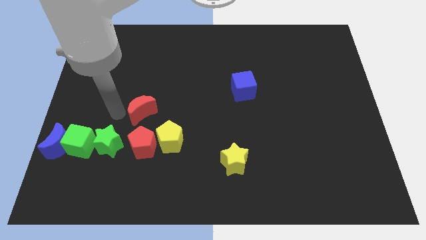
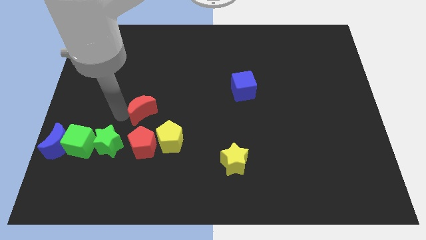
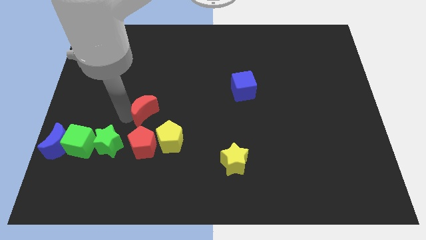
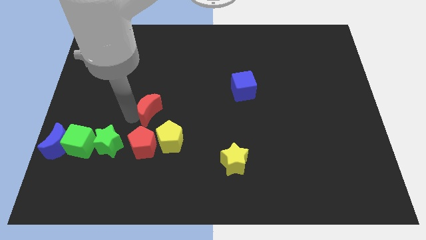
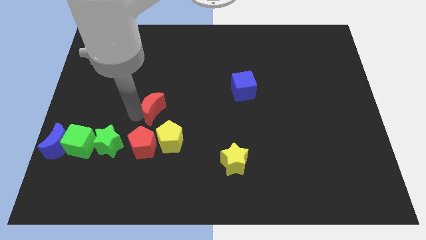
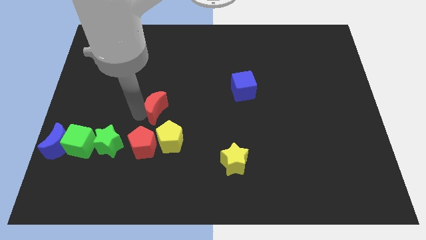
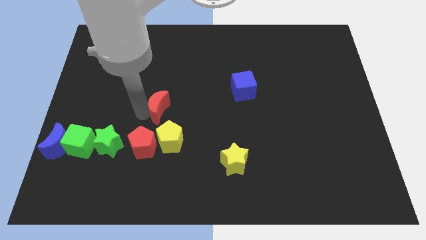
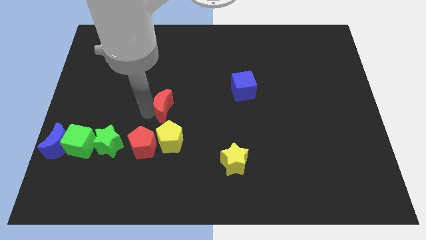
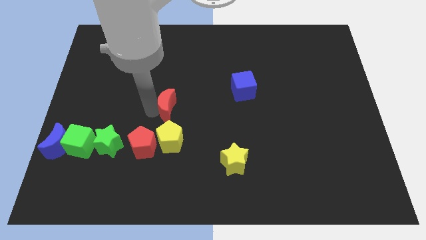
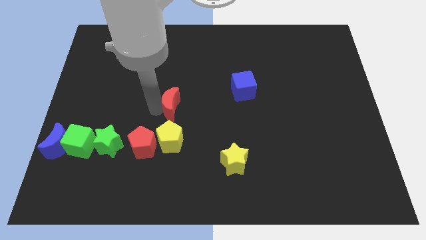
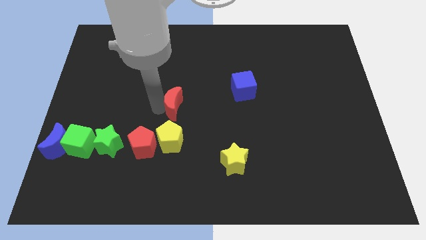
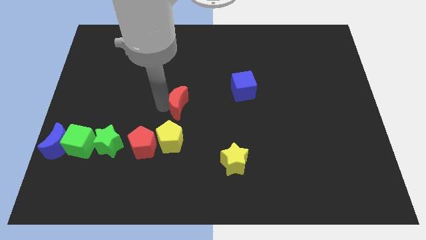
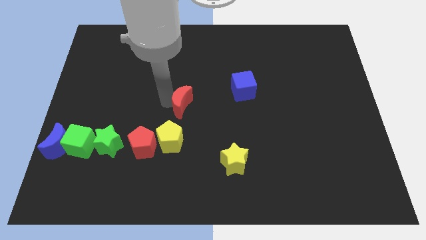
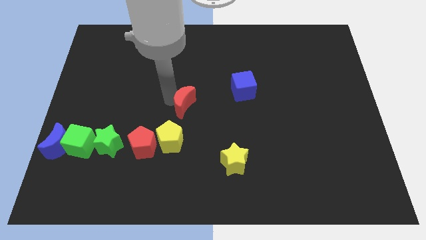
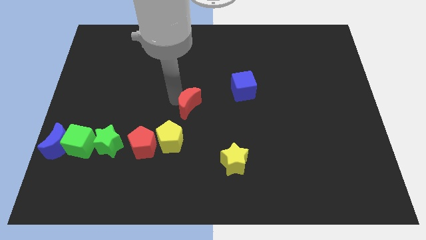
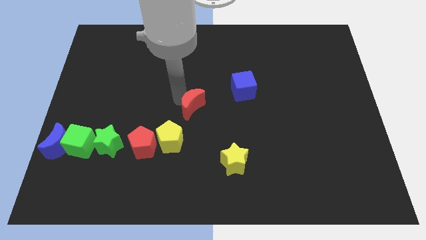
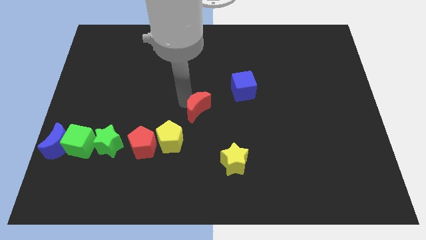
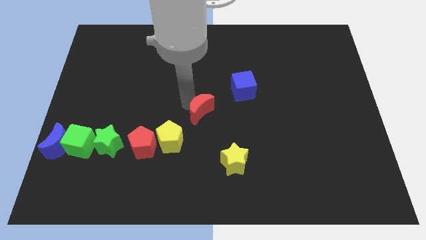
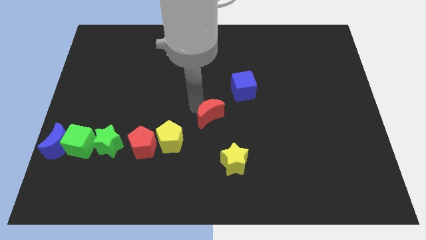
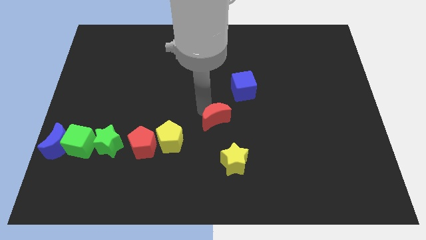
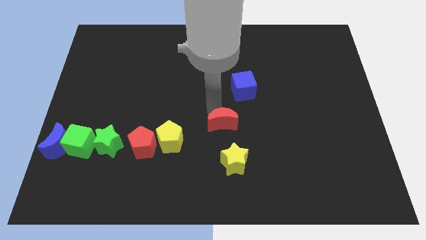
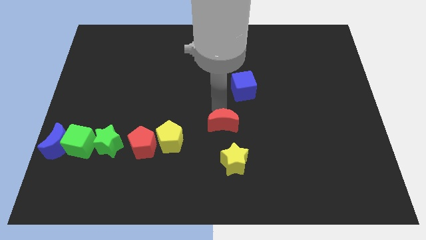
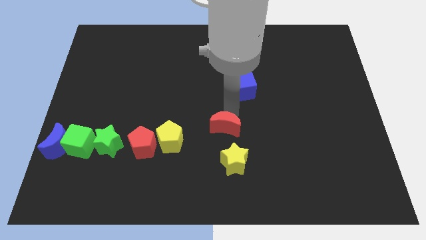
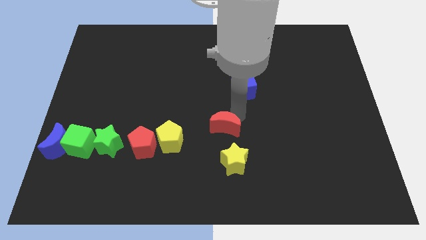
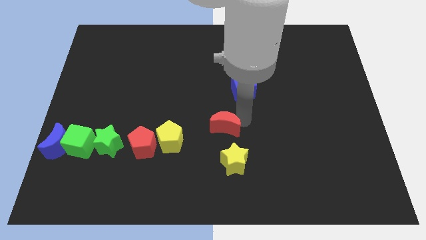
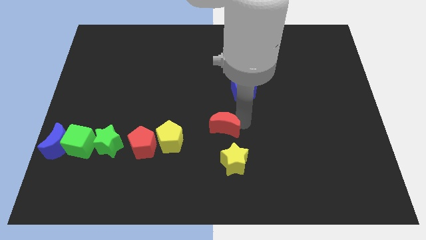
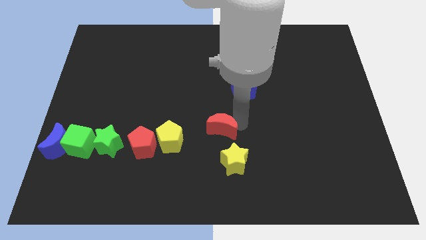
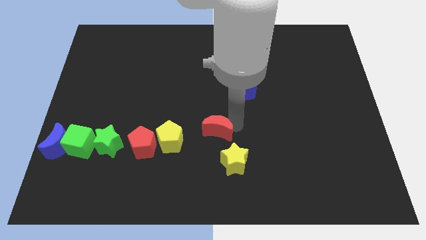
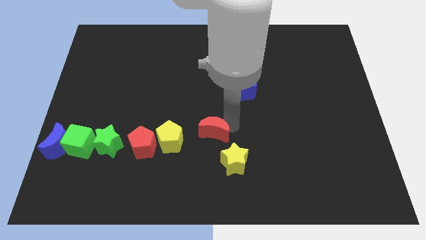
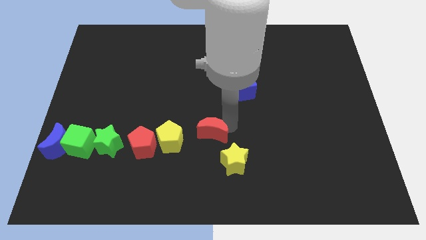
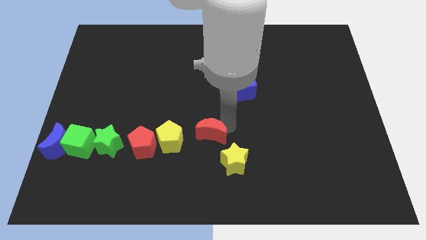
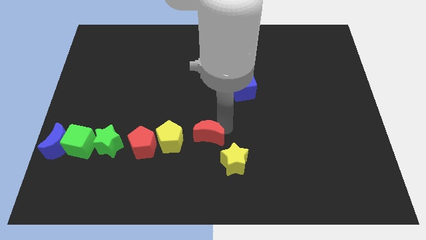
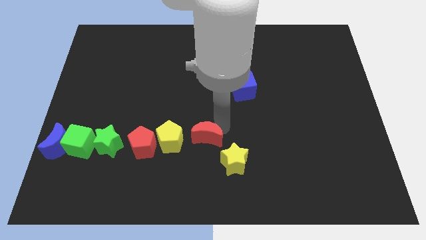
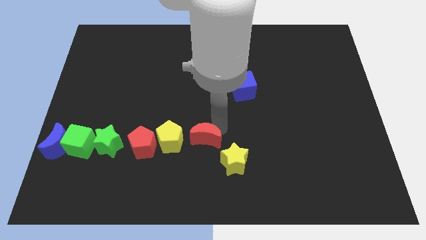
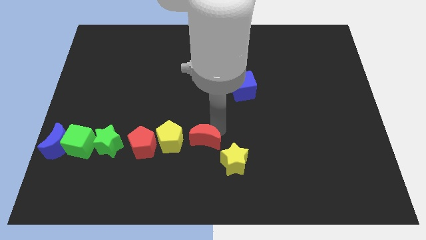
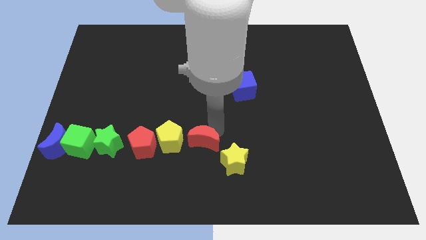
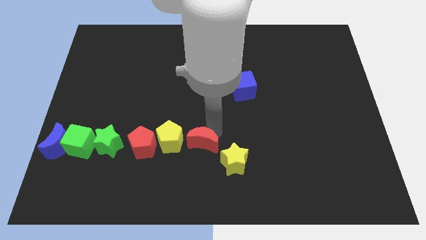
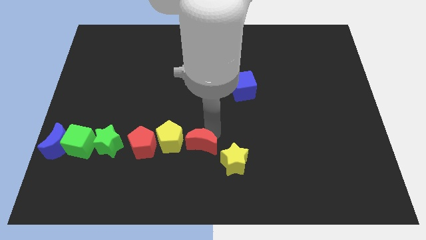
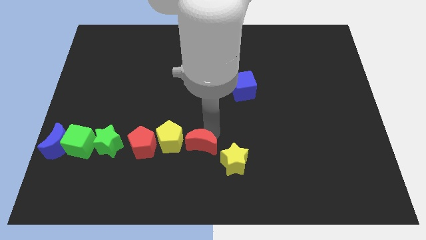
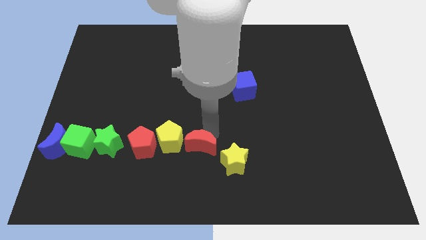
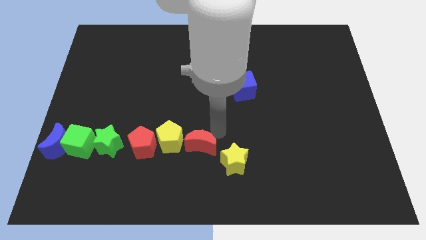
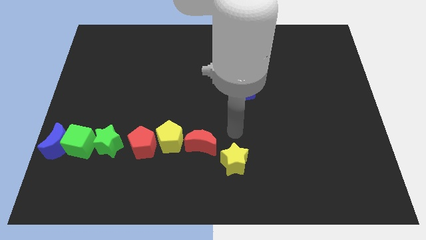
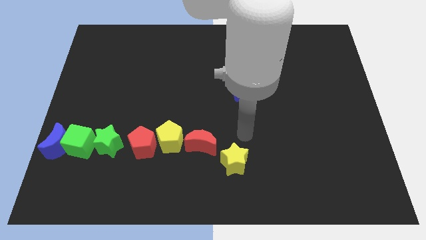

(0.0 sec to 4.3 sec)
place the red crescent right to the yellow pentagon

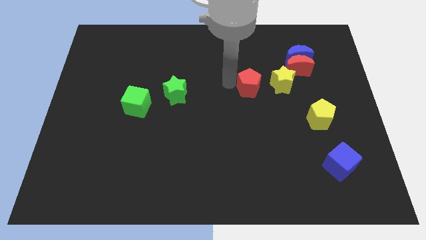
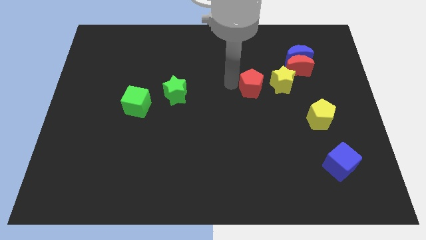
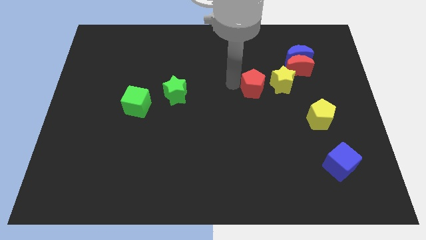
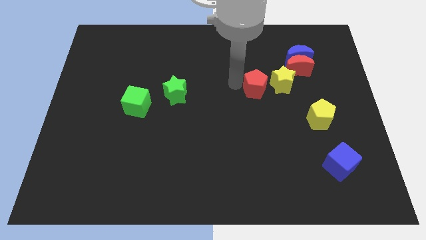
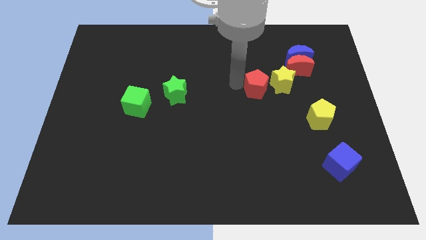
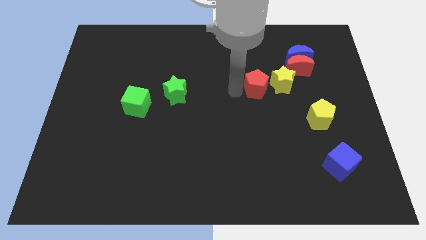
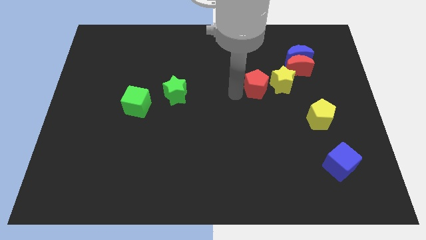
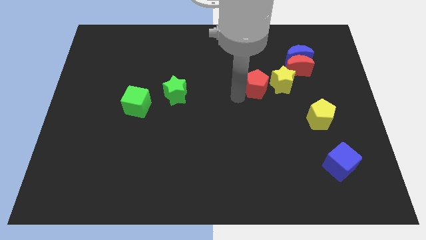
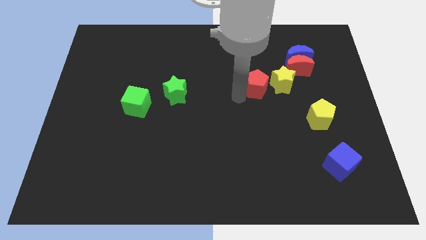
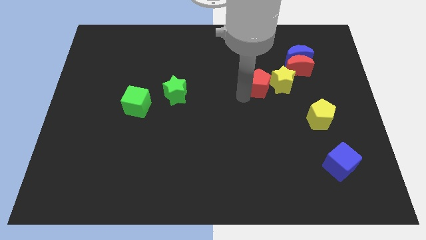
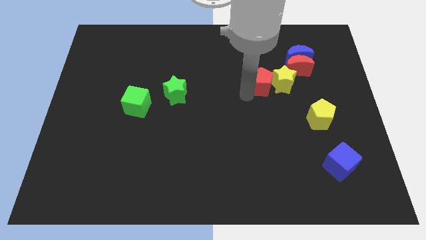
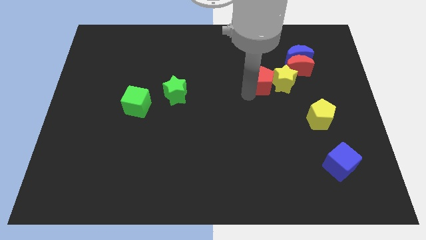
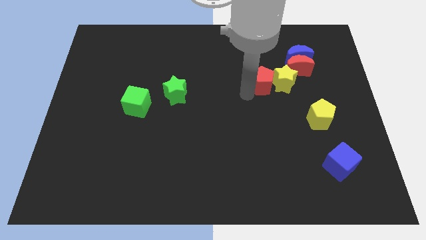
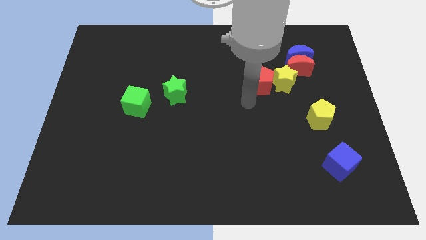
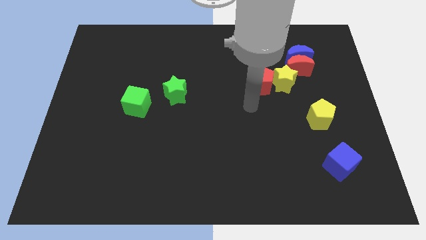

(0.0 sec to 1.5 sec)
place red pentagon into yellow star

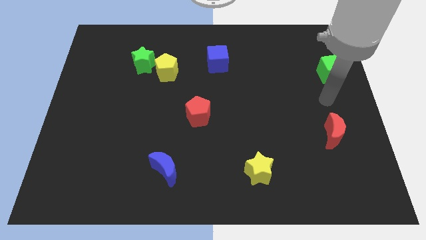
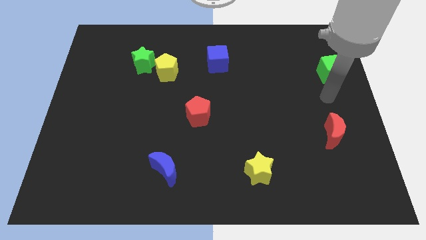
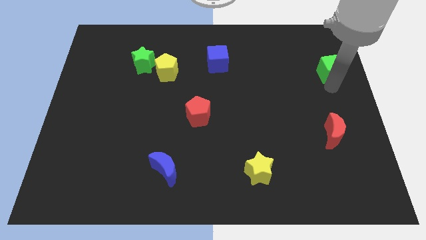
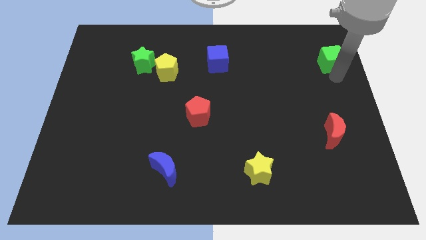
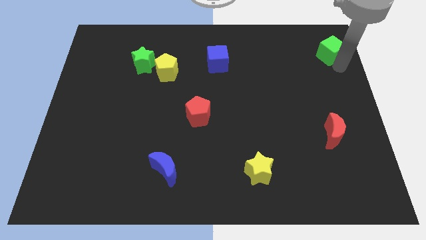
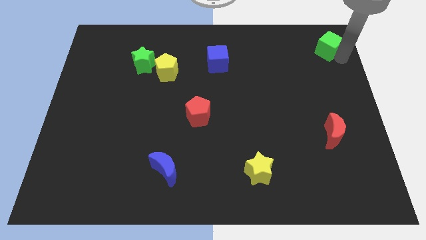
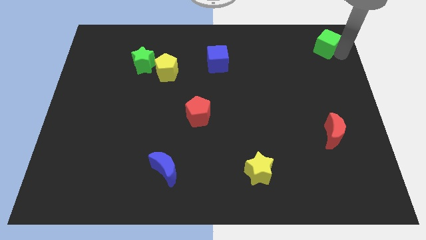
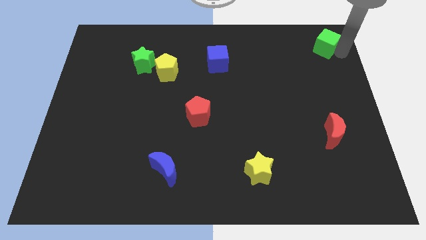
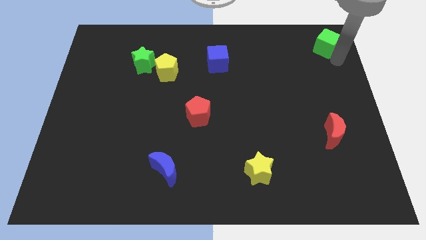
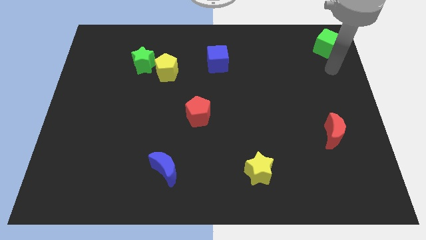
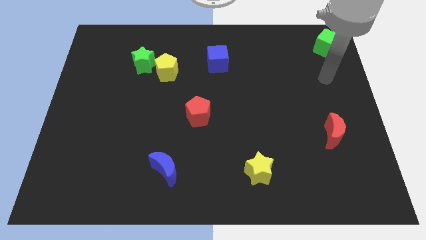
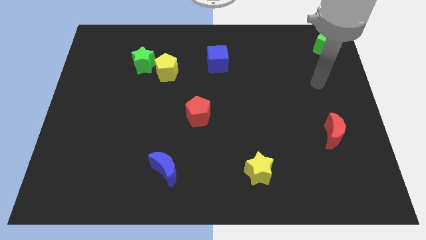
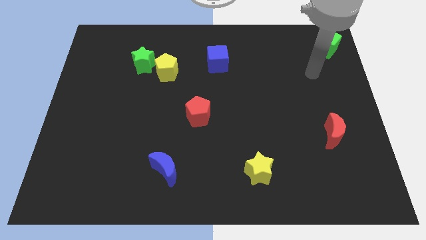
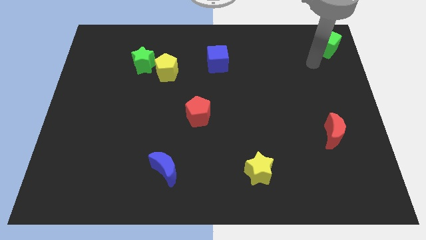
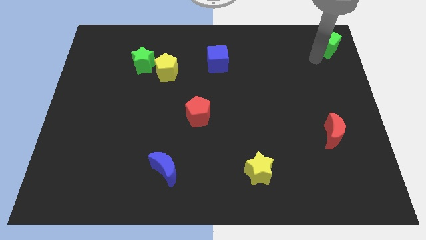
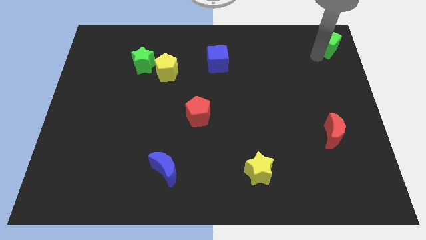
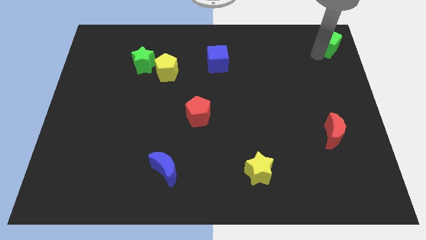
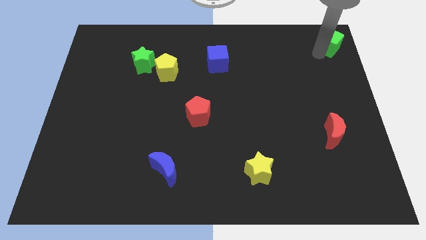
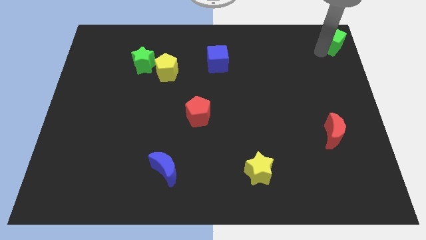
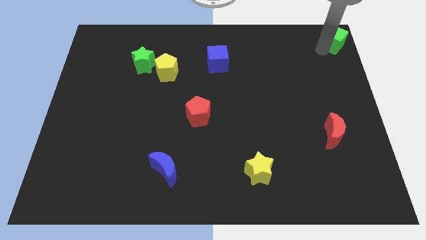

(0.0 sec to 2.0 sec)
move the green cube to the right top corner

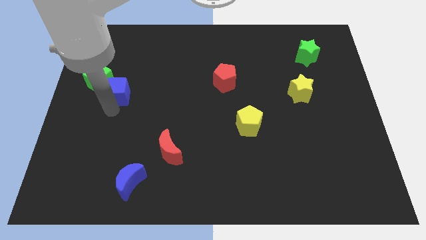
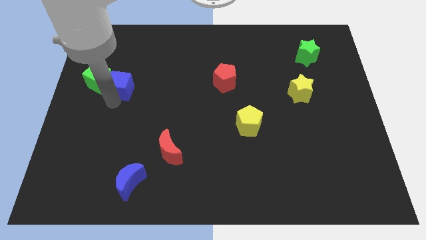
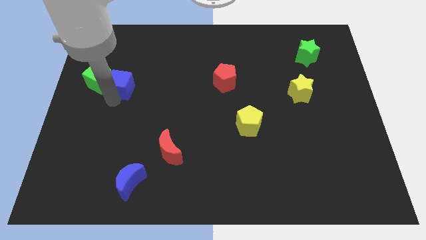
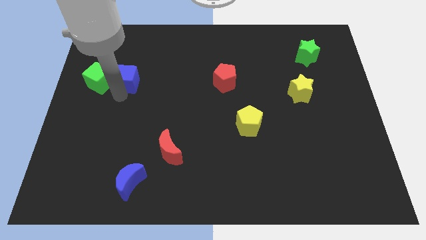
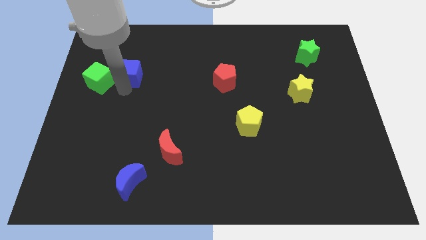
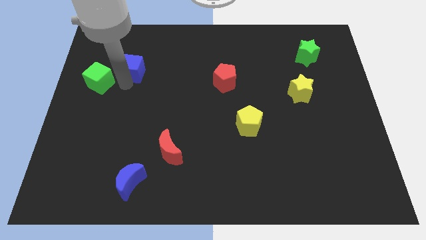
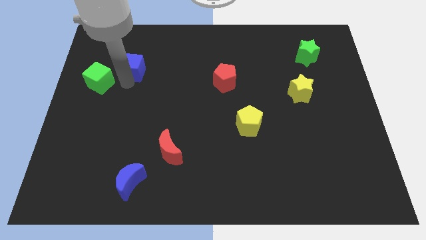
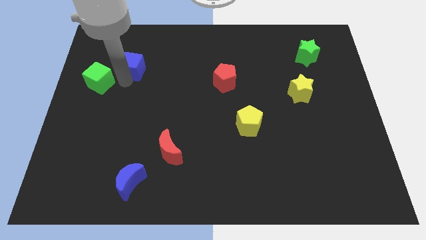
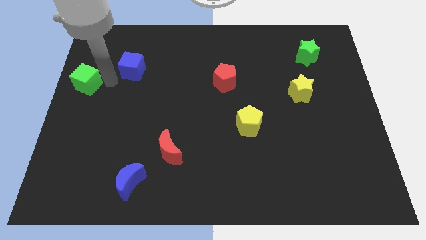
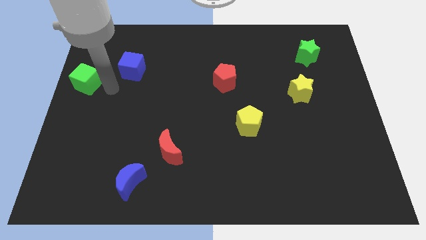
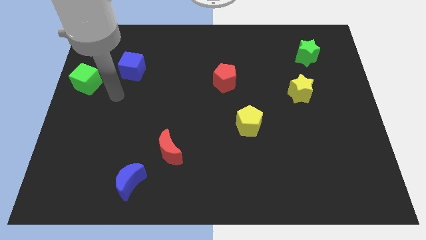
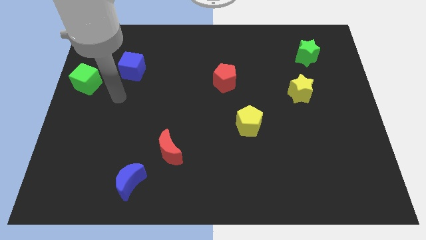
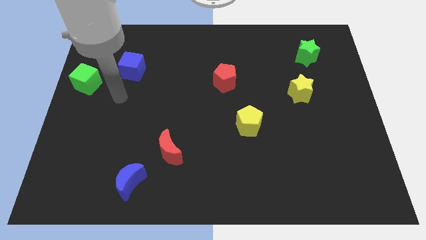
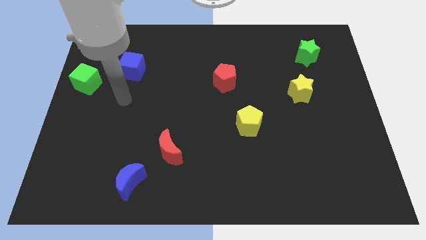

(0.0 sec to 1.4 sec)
push the blue cube to the right of the green cube
